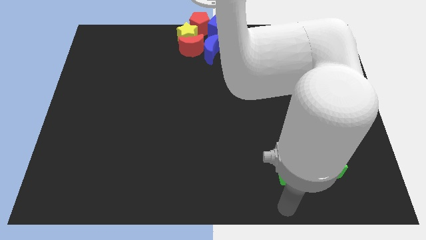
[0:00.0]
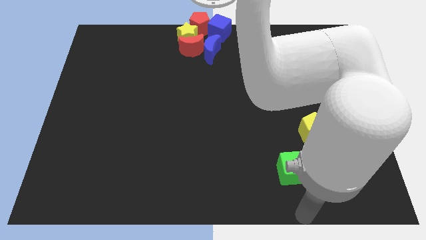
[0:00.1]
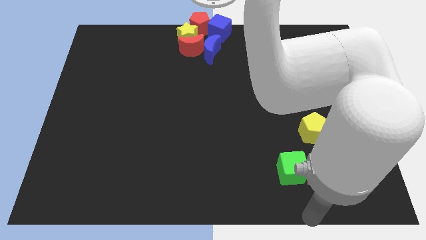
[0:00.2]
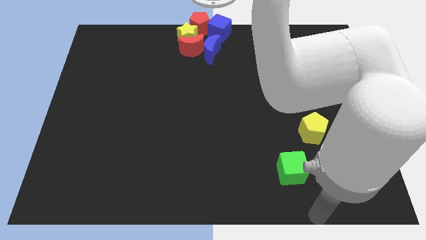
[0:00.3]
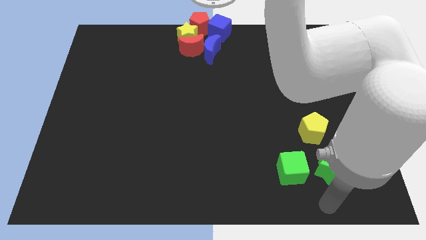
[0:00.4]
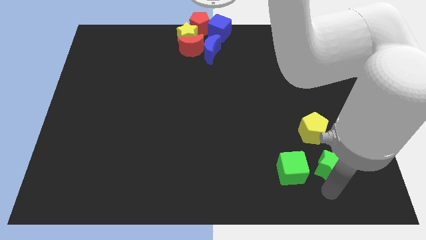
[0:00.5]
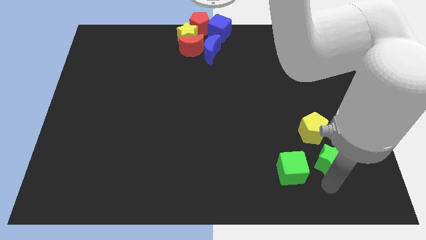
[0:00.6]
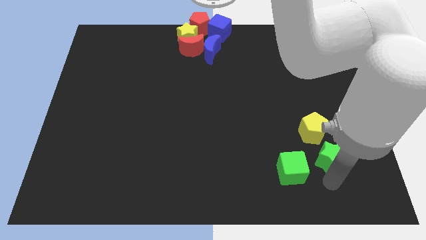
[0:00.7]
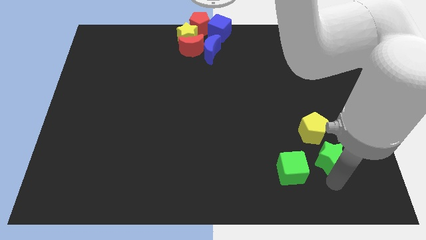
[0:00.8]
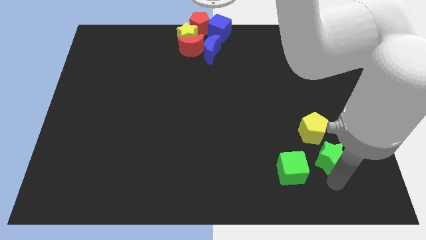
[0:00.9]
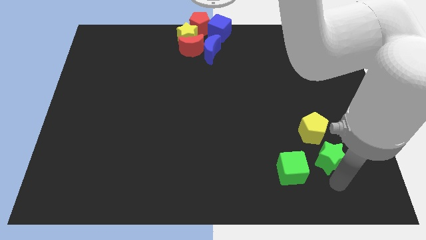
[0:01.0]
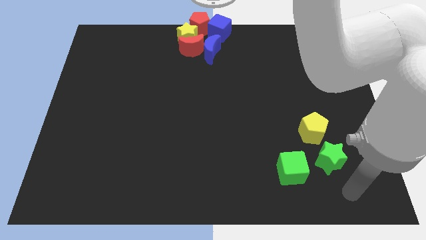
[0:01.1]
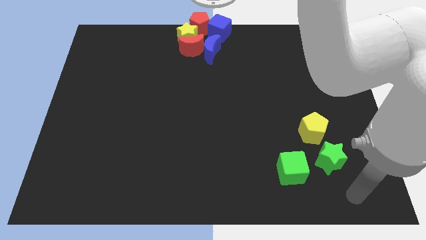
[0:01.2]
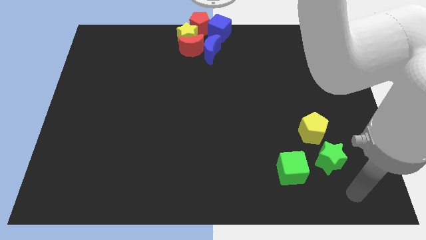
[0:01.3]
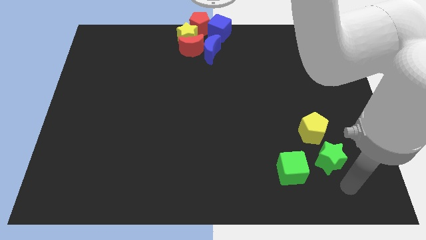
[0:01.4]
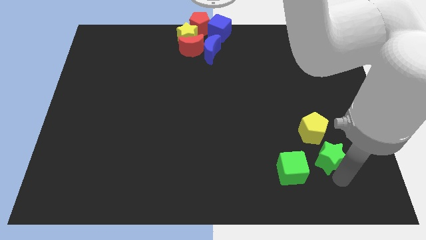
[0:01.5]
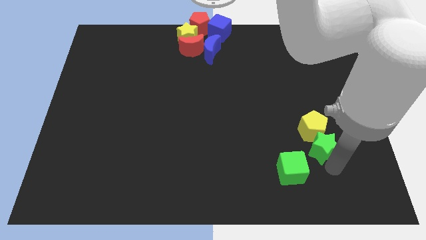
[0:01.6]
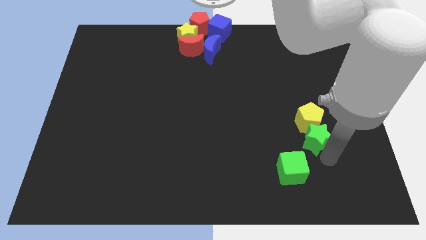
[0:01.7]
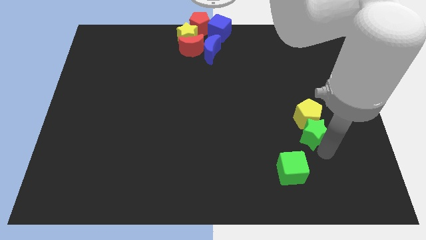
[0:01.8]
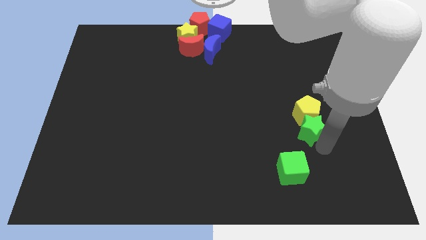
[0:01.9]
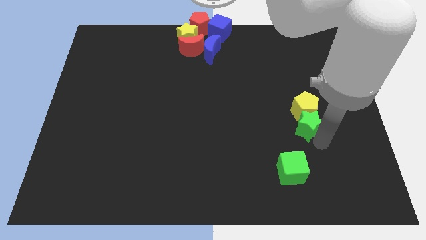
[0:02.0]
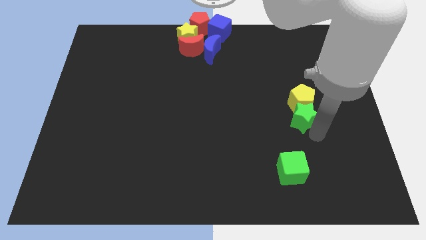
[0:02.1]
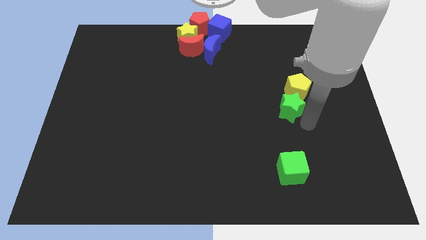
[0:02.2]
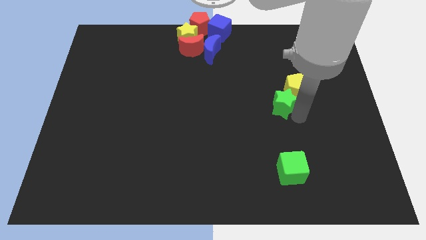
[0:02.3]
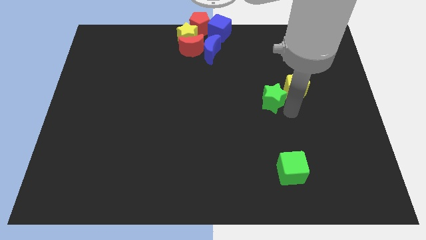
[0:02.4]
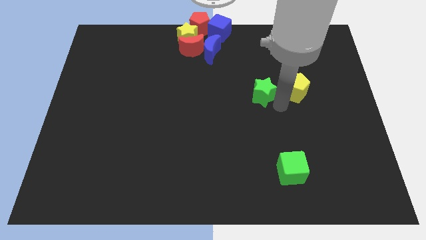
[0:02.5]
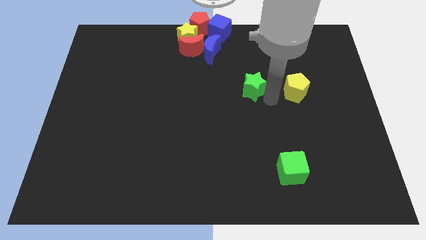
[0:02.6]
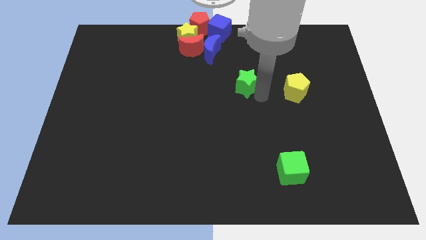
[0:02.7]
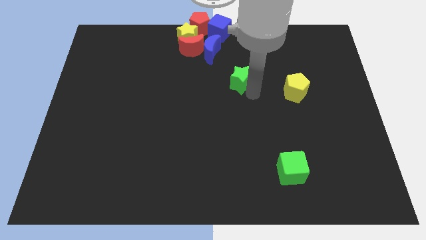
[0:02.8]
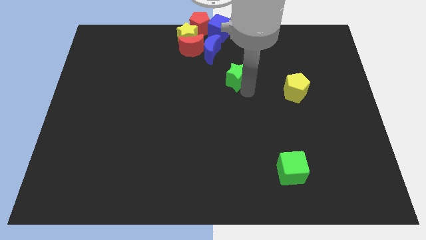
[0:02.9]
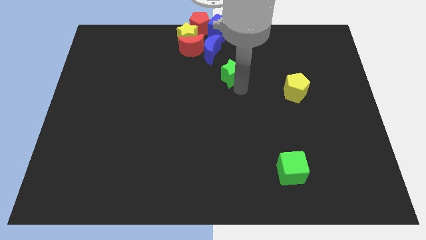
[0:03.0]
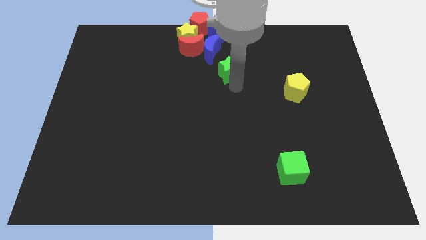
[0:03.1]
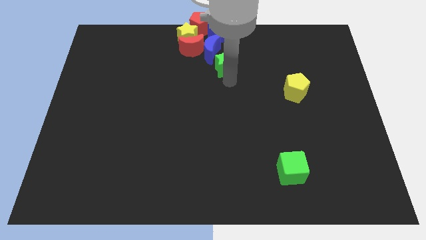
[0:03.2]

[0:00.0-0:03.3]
move green star to bottom of blue crescent

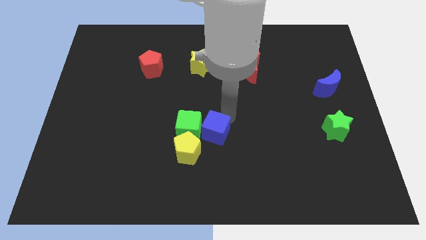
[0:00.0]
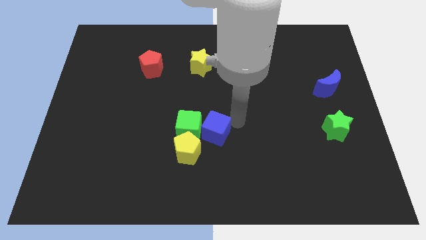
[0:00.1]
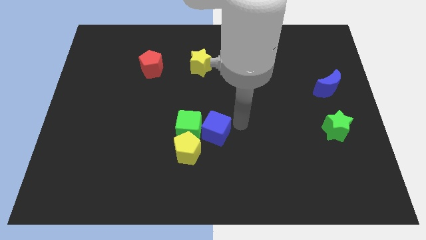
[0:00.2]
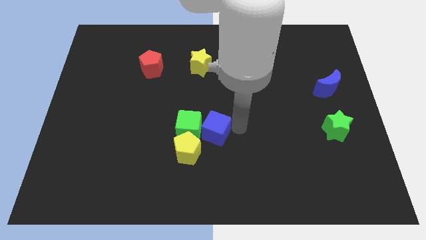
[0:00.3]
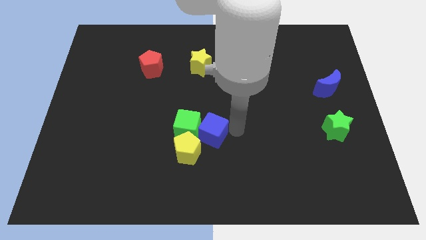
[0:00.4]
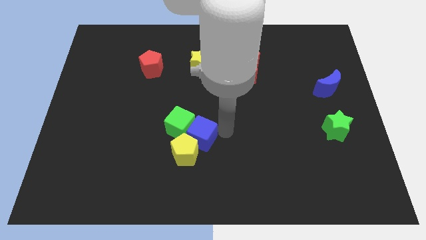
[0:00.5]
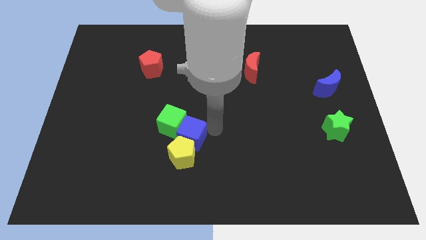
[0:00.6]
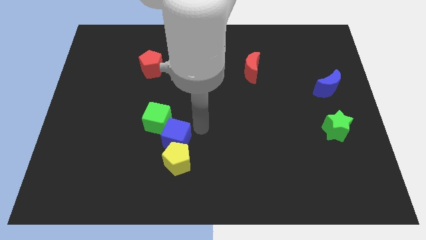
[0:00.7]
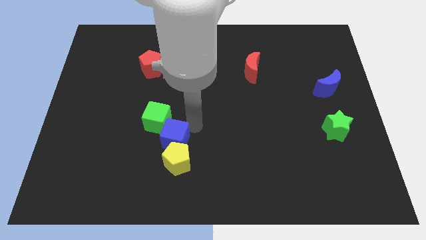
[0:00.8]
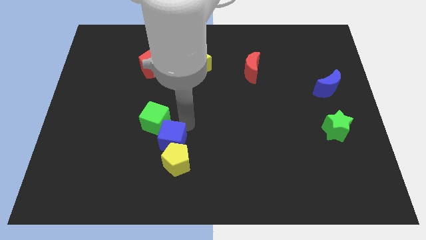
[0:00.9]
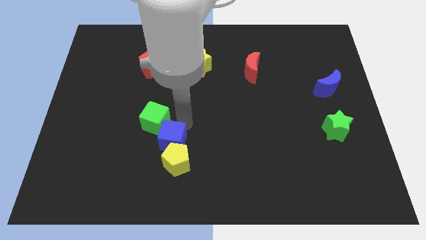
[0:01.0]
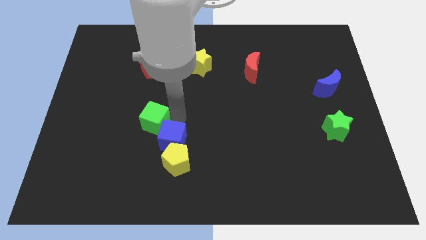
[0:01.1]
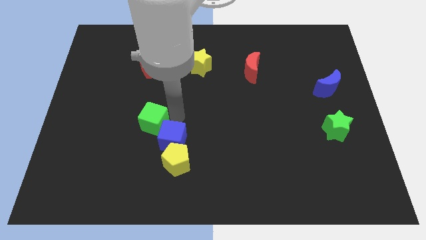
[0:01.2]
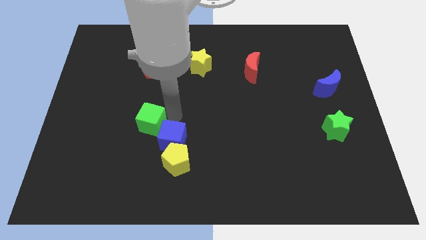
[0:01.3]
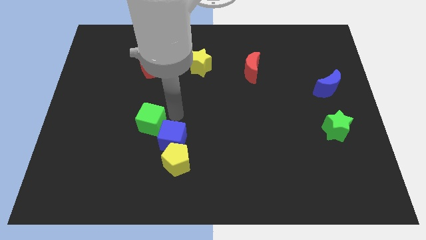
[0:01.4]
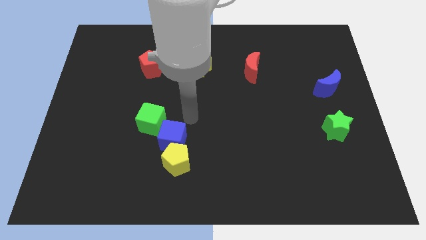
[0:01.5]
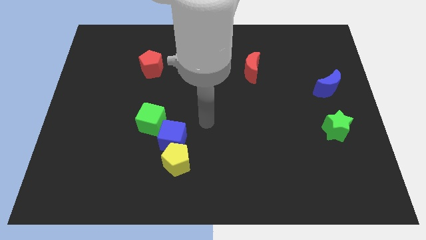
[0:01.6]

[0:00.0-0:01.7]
move the green and blue cubes slightly to the left

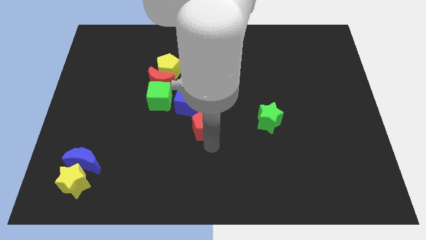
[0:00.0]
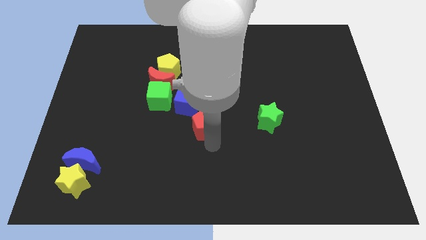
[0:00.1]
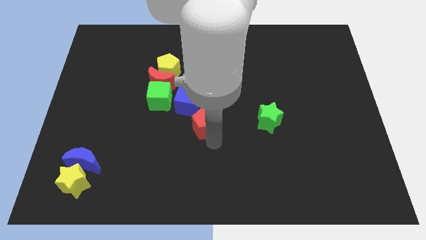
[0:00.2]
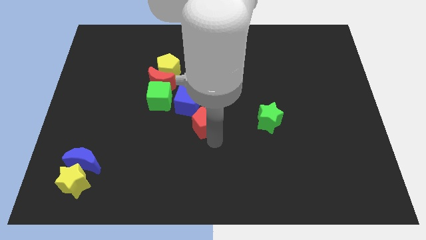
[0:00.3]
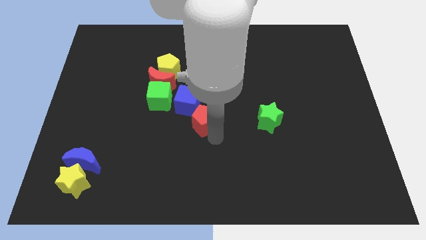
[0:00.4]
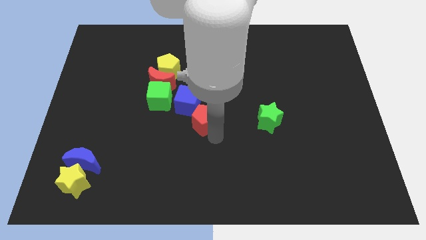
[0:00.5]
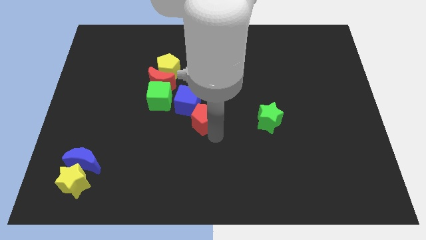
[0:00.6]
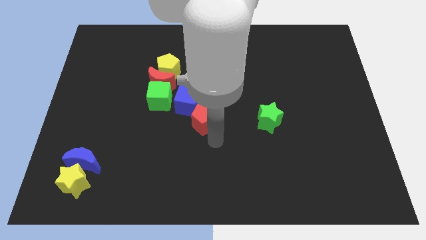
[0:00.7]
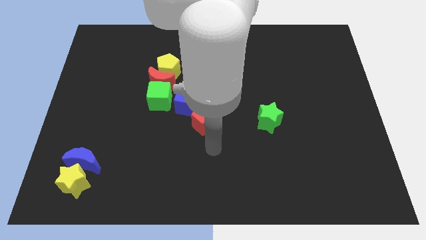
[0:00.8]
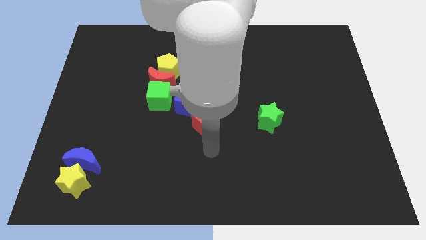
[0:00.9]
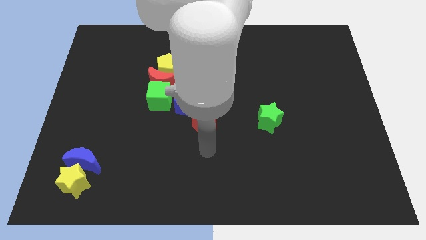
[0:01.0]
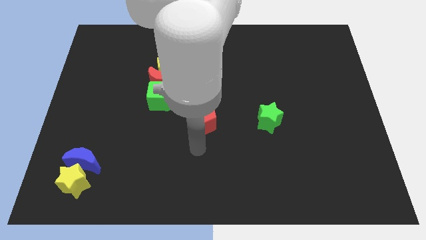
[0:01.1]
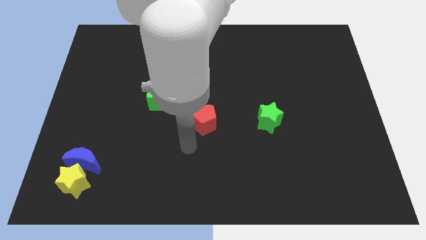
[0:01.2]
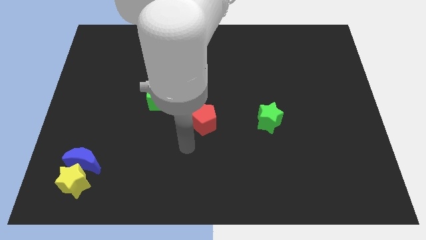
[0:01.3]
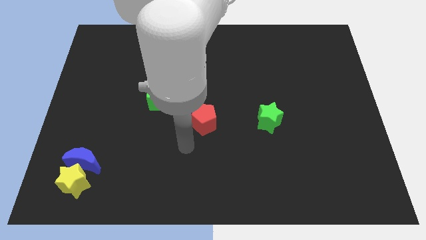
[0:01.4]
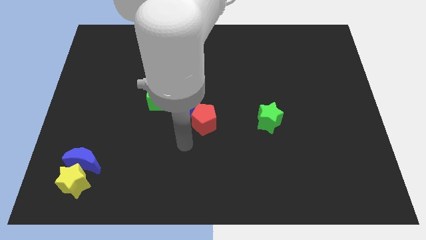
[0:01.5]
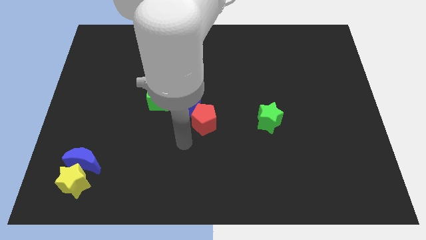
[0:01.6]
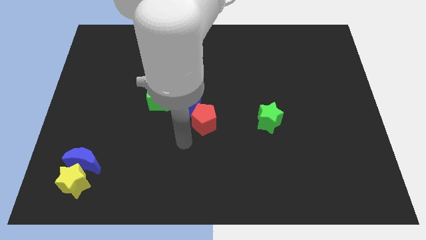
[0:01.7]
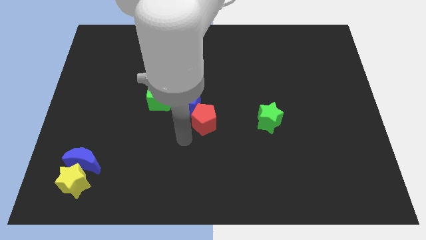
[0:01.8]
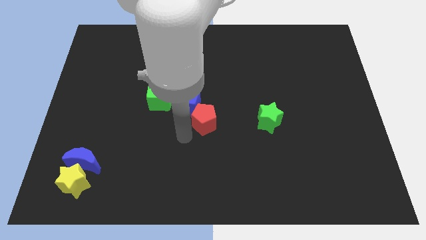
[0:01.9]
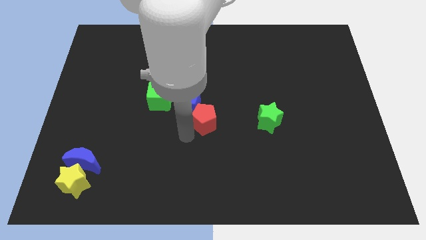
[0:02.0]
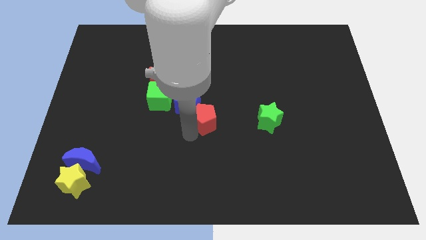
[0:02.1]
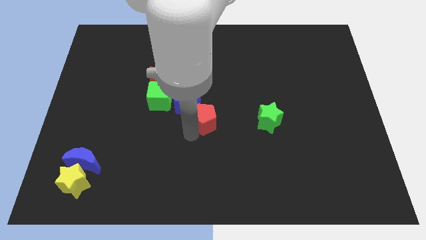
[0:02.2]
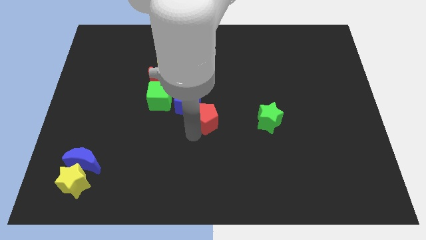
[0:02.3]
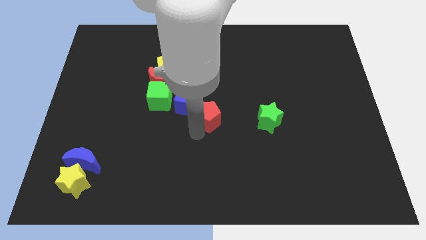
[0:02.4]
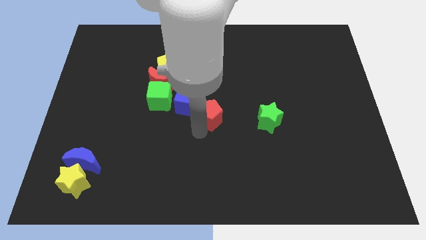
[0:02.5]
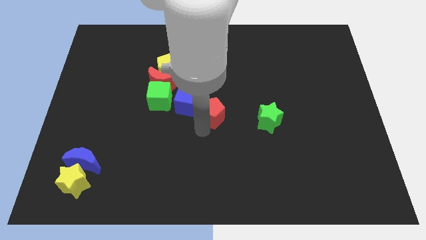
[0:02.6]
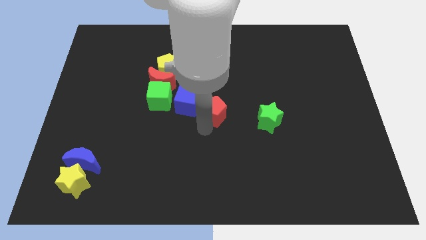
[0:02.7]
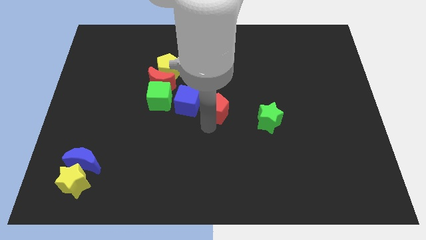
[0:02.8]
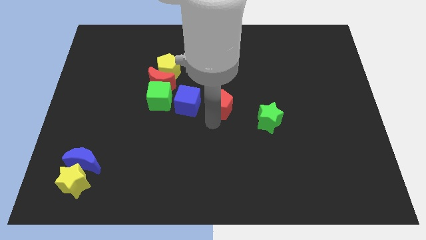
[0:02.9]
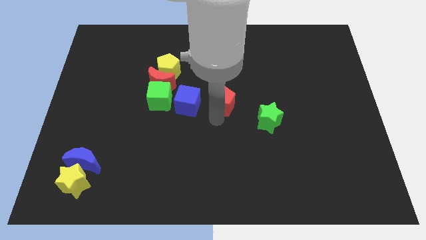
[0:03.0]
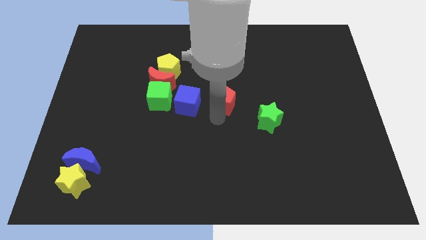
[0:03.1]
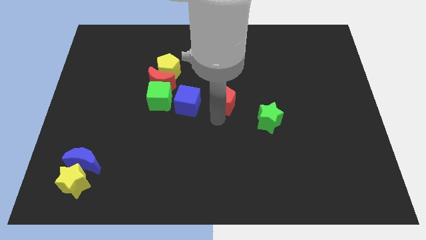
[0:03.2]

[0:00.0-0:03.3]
place the red pentagon right to the blue cube

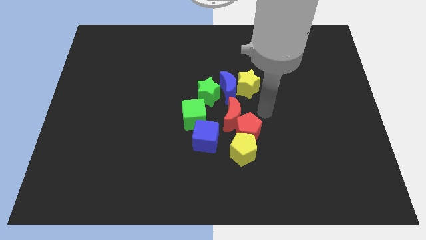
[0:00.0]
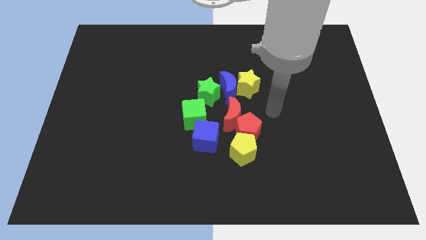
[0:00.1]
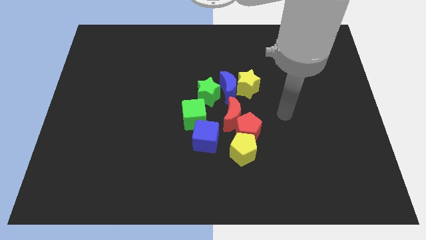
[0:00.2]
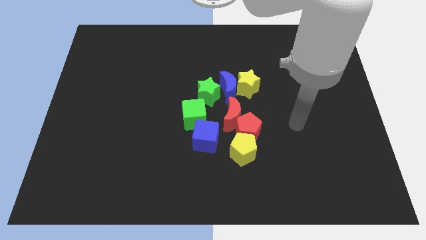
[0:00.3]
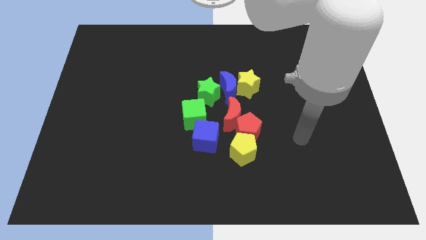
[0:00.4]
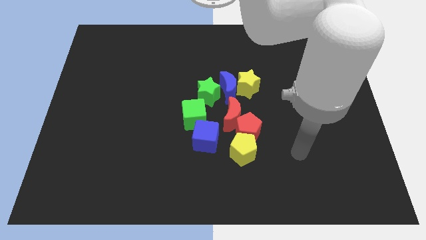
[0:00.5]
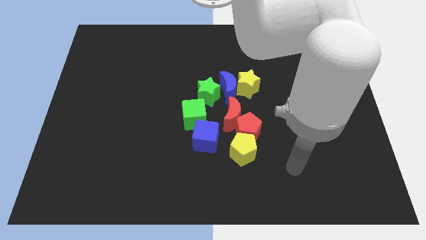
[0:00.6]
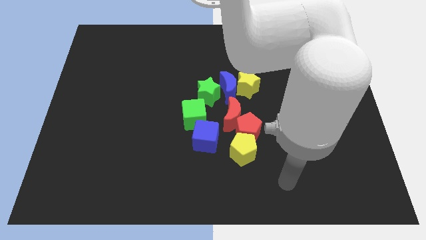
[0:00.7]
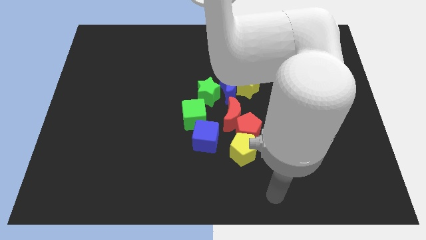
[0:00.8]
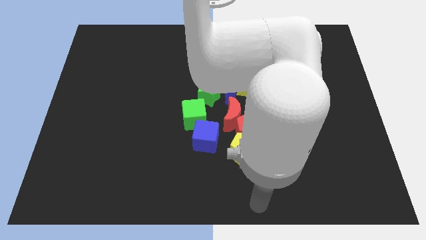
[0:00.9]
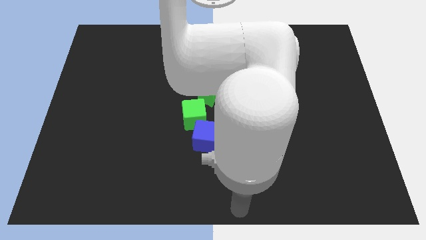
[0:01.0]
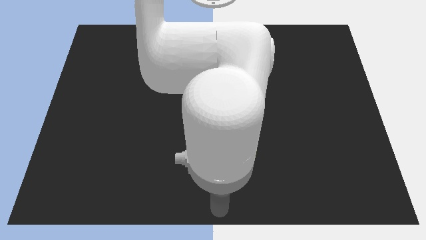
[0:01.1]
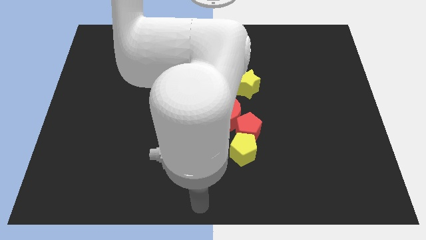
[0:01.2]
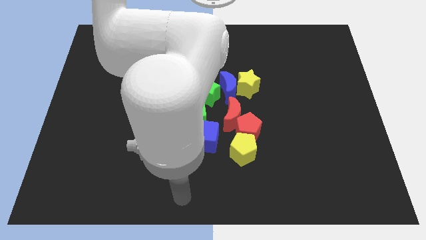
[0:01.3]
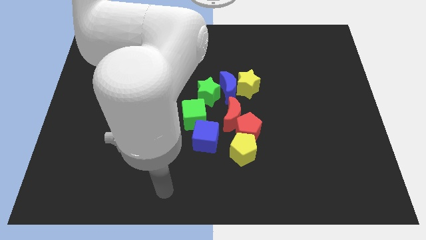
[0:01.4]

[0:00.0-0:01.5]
go away from the group of blocks
